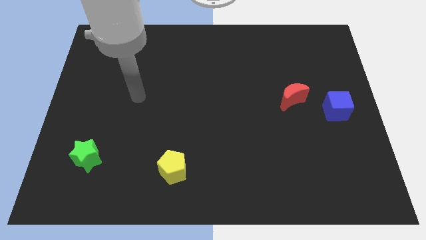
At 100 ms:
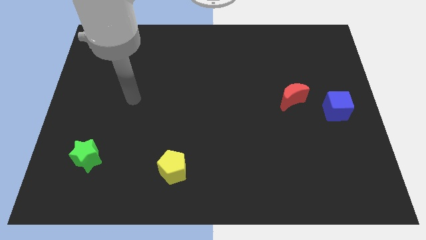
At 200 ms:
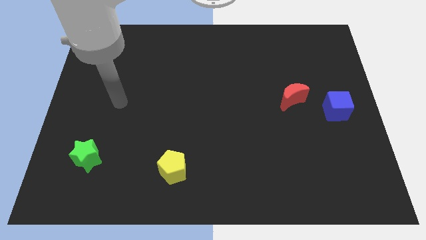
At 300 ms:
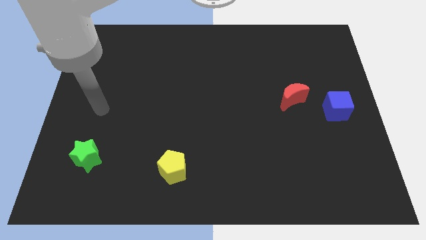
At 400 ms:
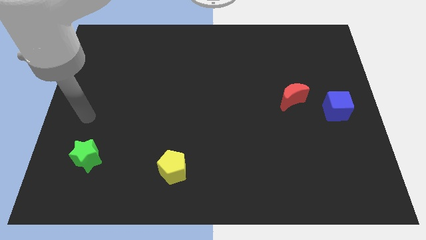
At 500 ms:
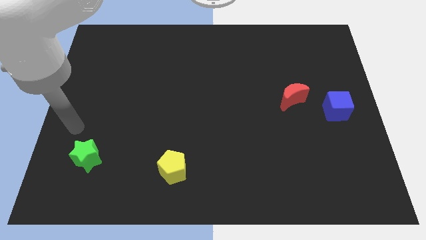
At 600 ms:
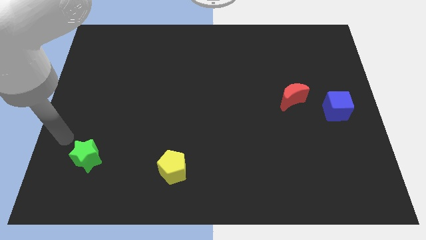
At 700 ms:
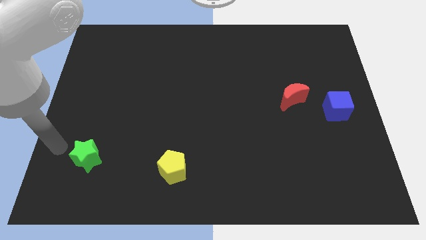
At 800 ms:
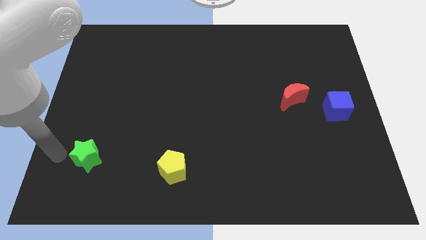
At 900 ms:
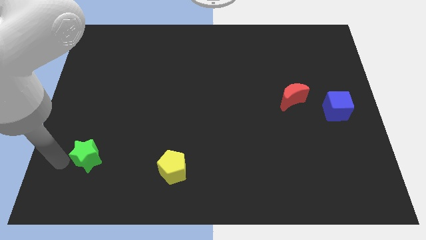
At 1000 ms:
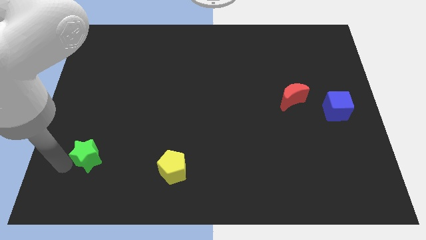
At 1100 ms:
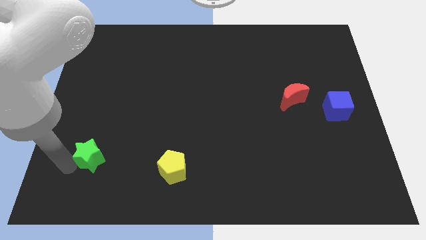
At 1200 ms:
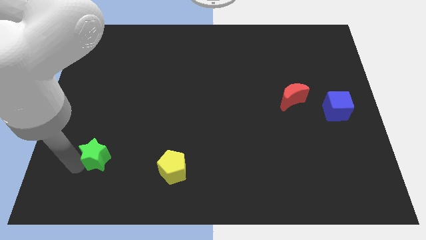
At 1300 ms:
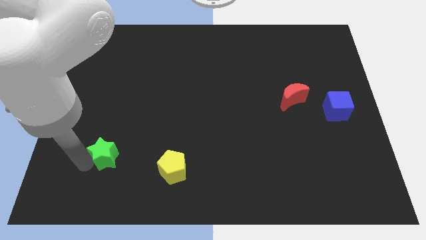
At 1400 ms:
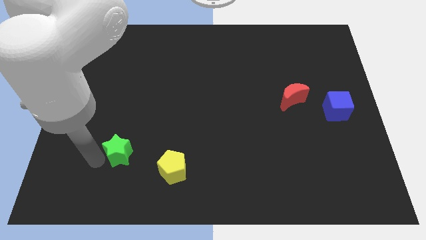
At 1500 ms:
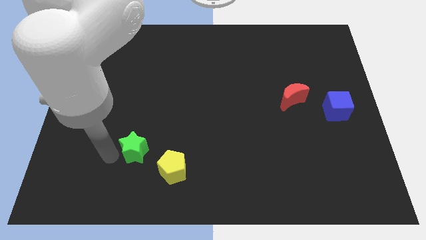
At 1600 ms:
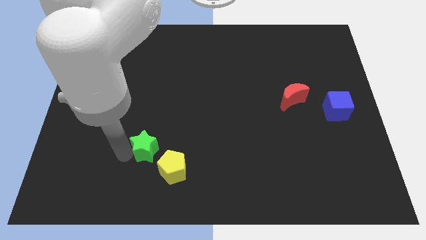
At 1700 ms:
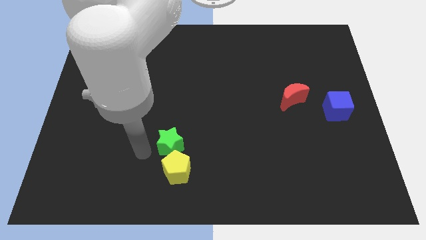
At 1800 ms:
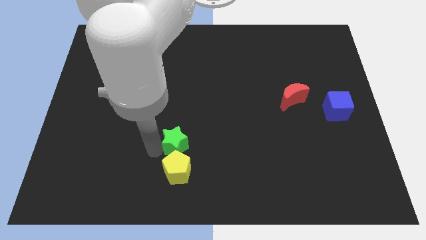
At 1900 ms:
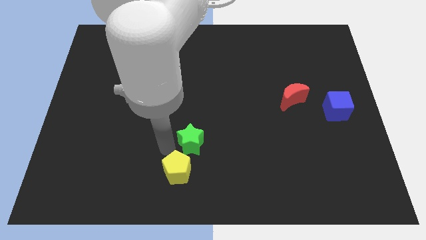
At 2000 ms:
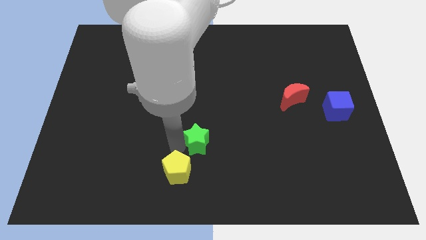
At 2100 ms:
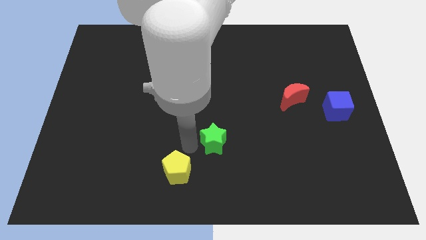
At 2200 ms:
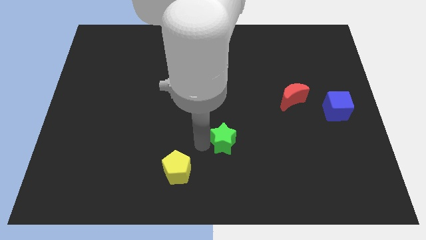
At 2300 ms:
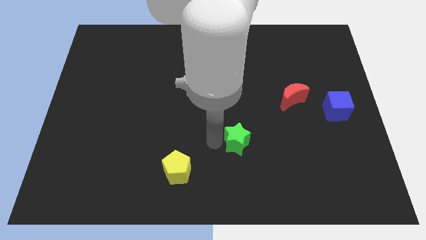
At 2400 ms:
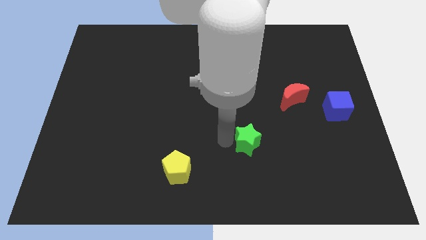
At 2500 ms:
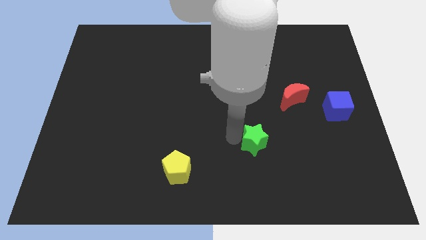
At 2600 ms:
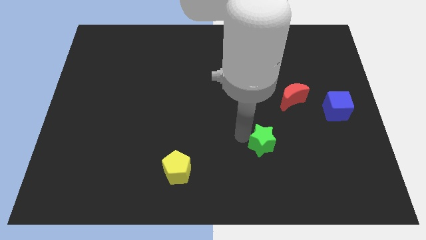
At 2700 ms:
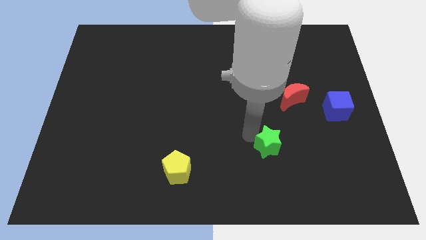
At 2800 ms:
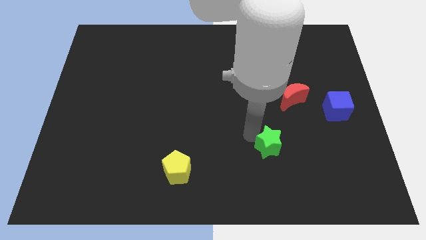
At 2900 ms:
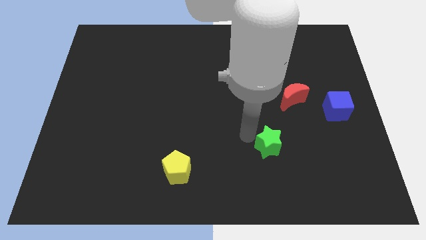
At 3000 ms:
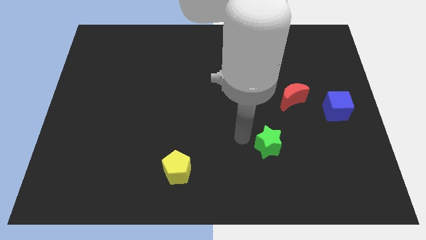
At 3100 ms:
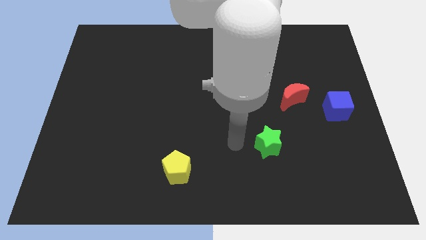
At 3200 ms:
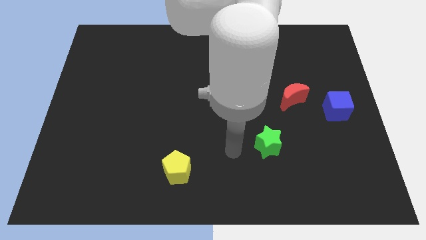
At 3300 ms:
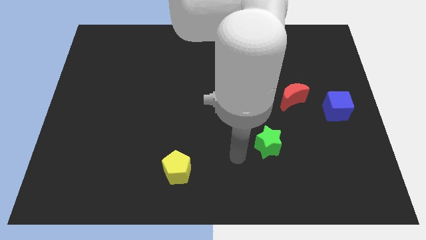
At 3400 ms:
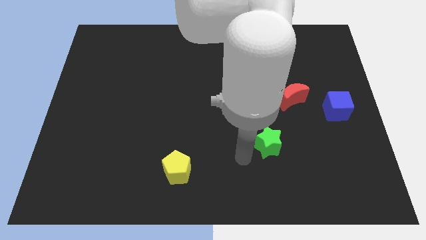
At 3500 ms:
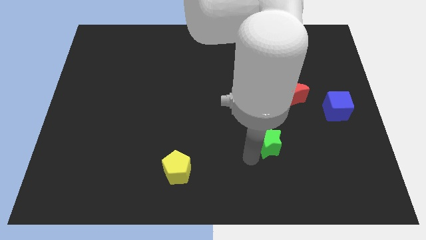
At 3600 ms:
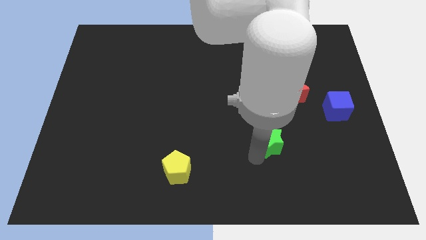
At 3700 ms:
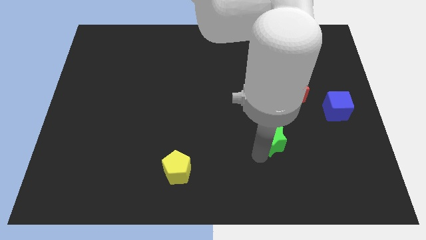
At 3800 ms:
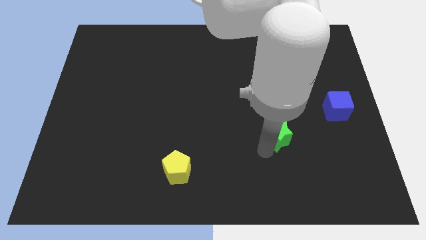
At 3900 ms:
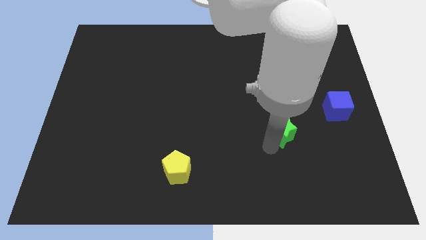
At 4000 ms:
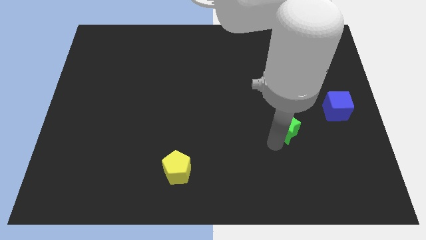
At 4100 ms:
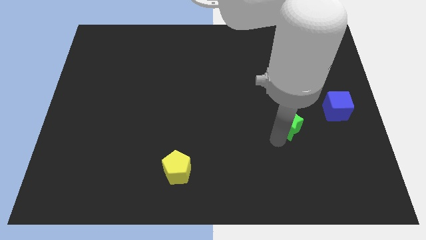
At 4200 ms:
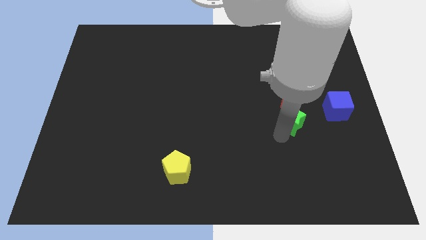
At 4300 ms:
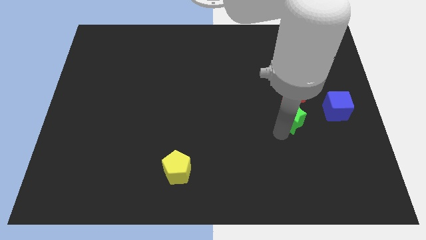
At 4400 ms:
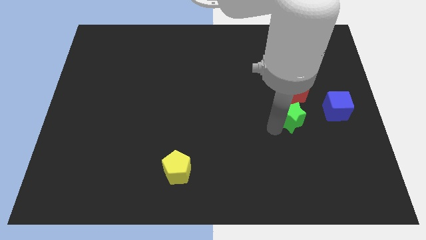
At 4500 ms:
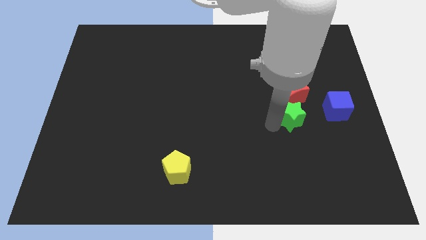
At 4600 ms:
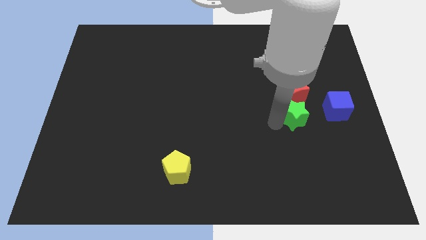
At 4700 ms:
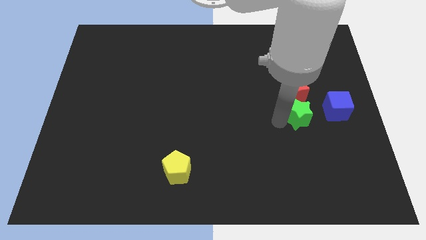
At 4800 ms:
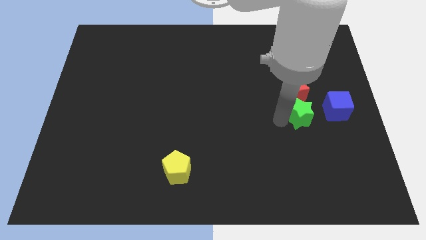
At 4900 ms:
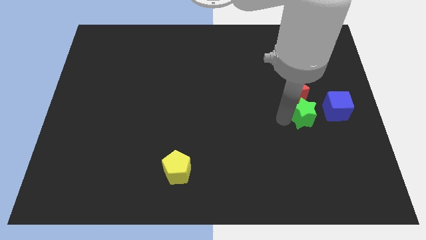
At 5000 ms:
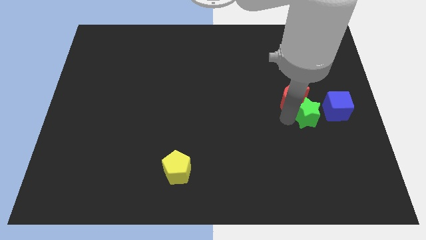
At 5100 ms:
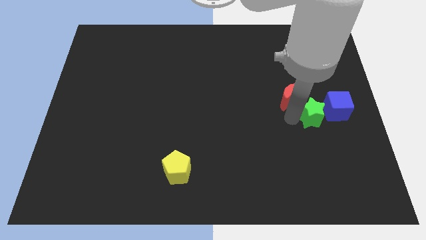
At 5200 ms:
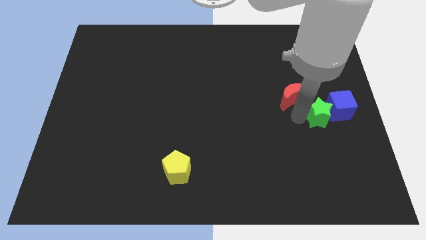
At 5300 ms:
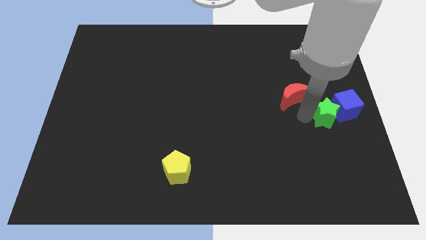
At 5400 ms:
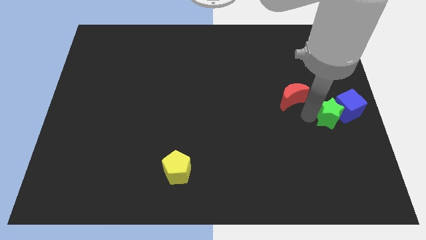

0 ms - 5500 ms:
move the green block close to the blue block

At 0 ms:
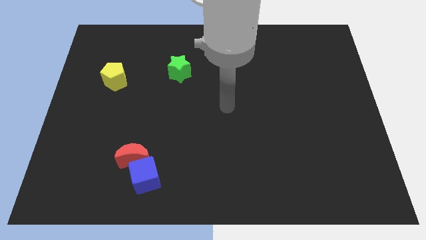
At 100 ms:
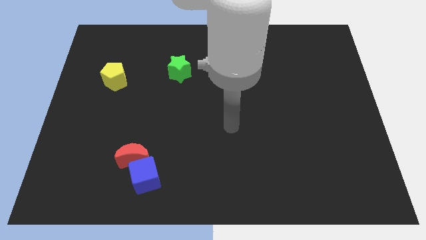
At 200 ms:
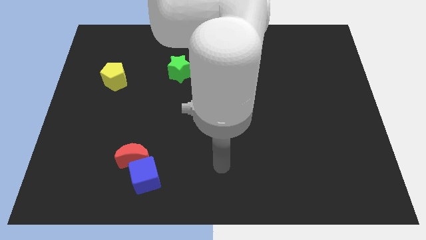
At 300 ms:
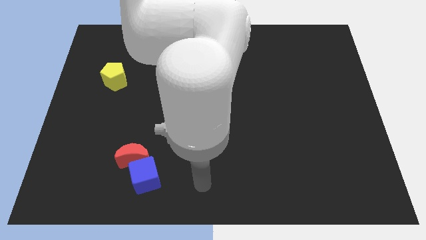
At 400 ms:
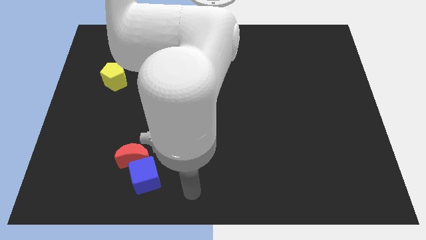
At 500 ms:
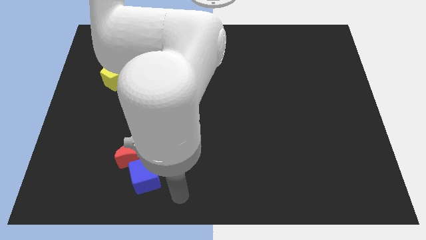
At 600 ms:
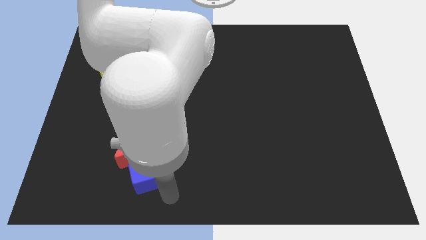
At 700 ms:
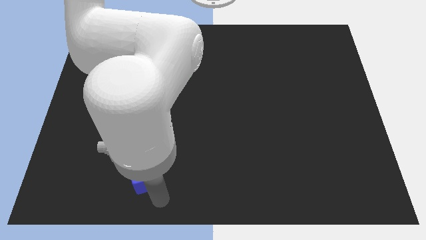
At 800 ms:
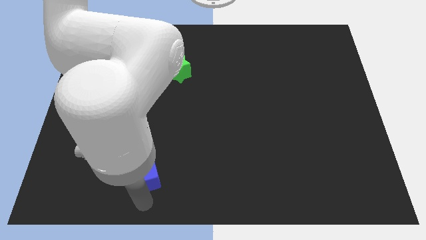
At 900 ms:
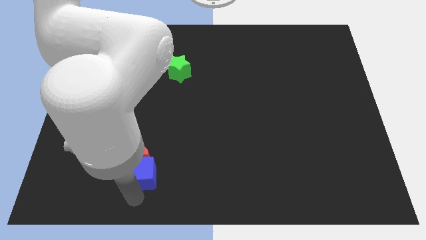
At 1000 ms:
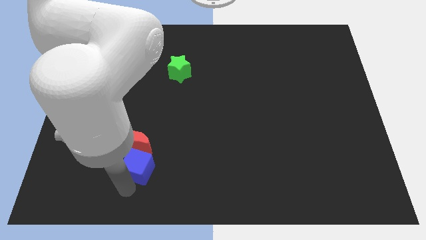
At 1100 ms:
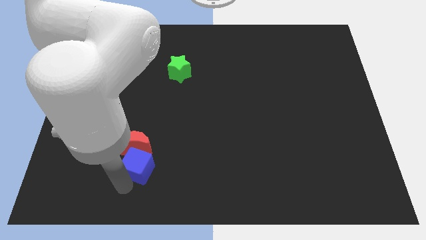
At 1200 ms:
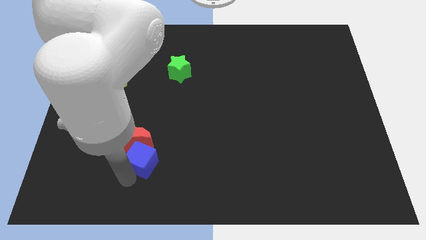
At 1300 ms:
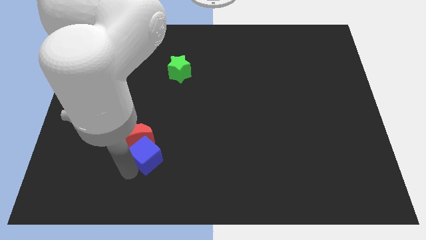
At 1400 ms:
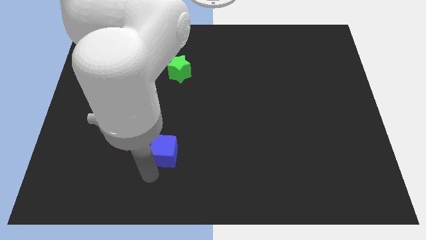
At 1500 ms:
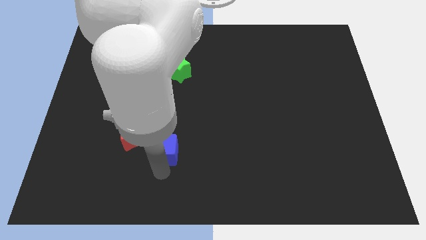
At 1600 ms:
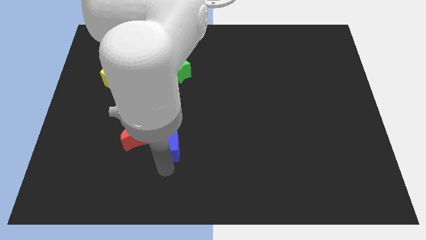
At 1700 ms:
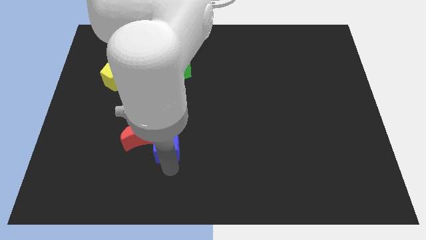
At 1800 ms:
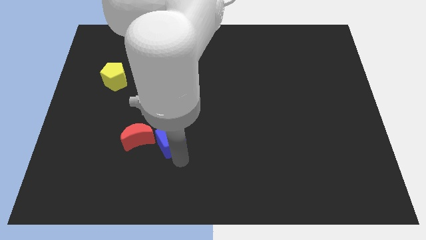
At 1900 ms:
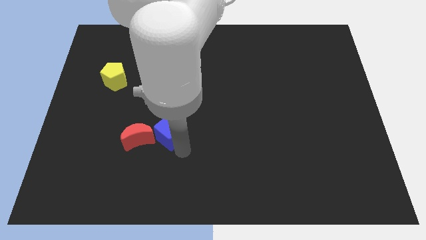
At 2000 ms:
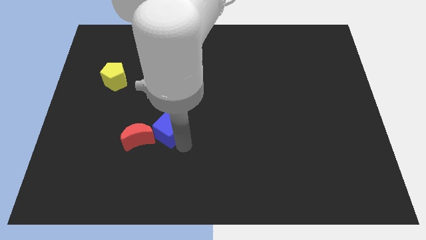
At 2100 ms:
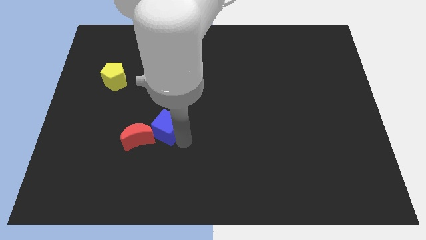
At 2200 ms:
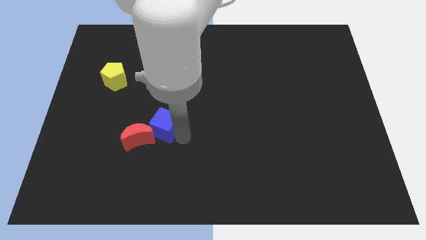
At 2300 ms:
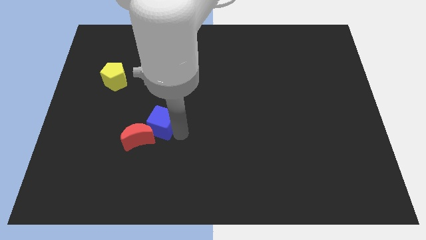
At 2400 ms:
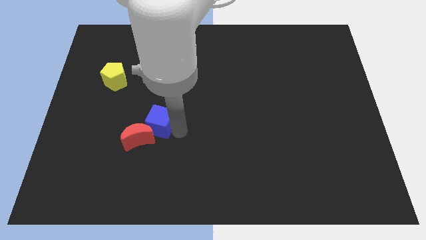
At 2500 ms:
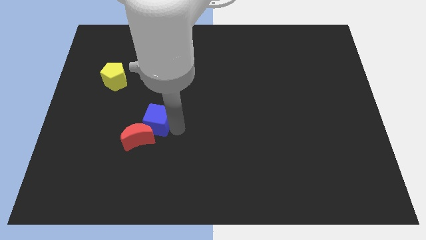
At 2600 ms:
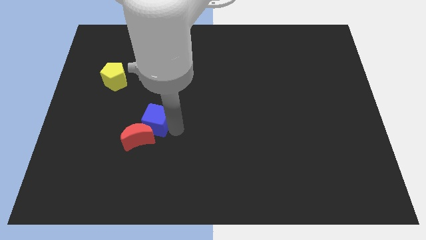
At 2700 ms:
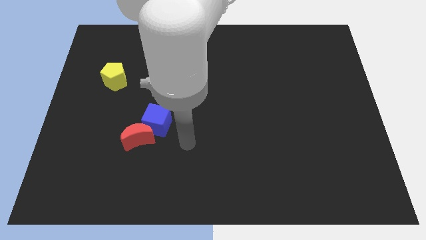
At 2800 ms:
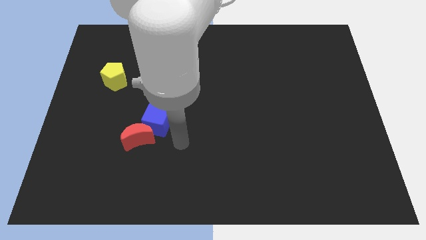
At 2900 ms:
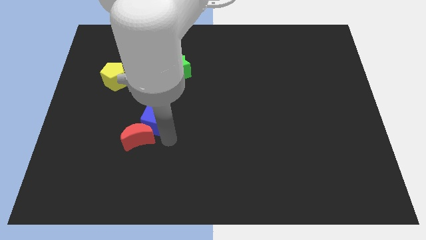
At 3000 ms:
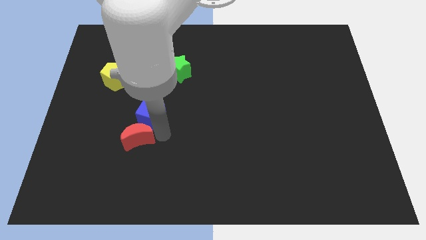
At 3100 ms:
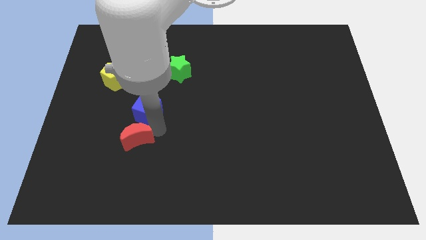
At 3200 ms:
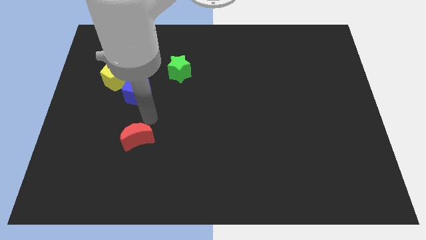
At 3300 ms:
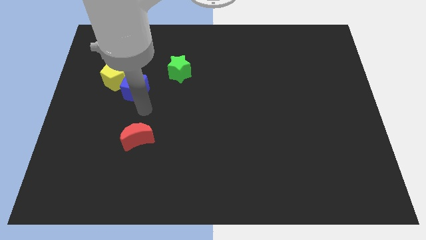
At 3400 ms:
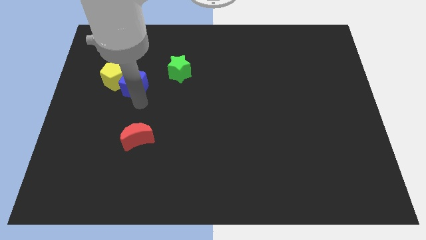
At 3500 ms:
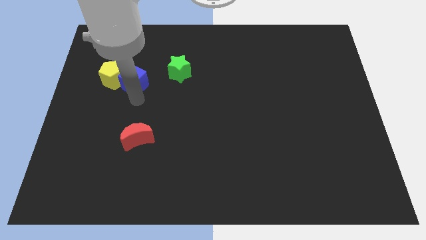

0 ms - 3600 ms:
push the cube next to the pentagon
